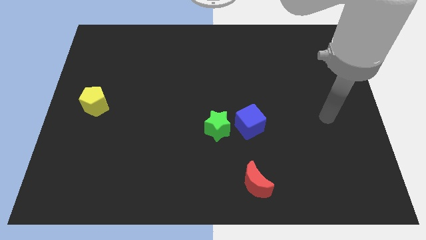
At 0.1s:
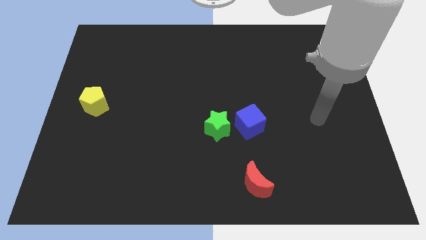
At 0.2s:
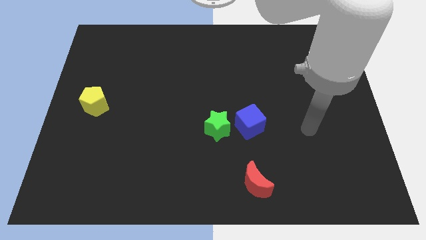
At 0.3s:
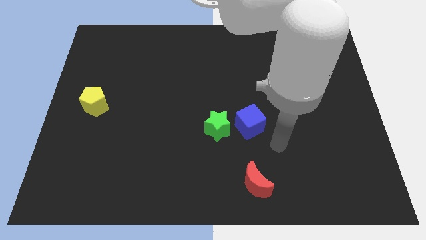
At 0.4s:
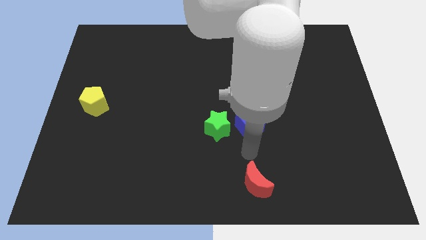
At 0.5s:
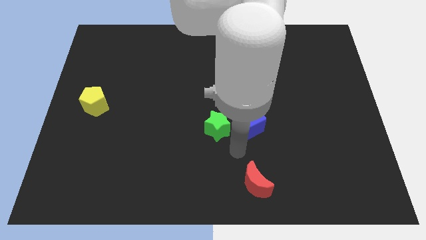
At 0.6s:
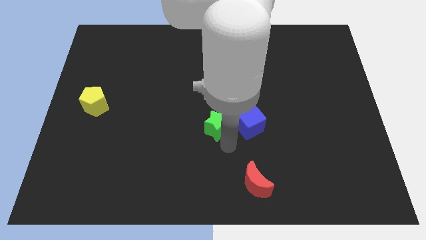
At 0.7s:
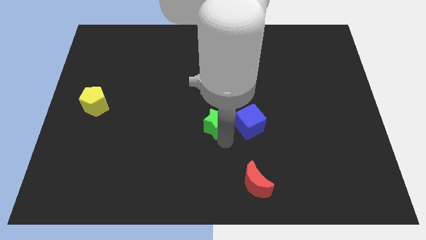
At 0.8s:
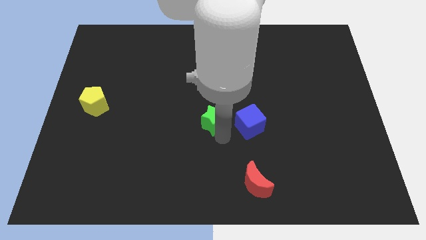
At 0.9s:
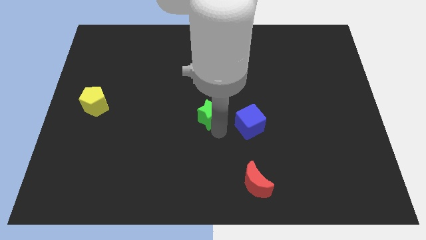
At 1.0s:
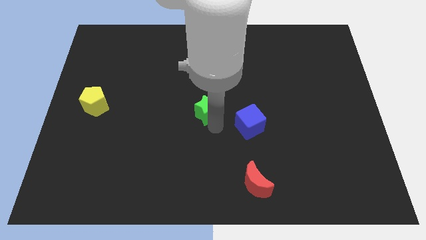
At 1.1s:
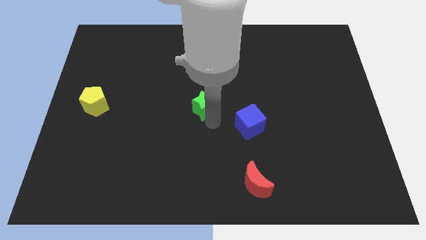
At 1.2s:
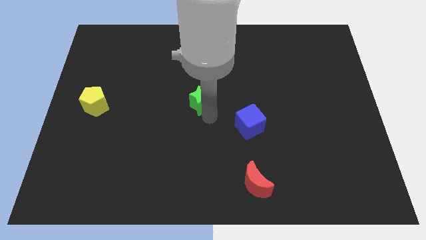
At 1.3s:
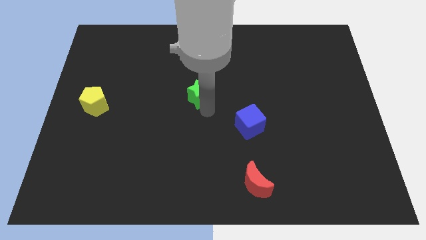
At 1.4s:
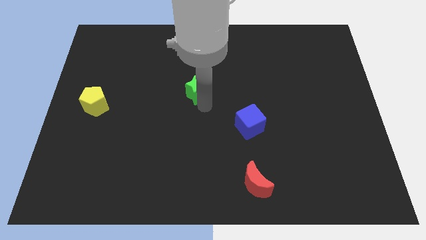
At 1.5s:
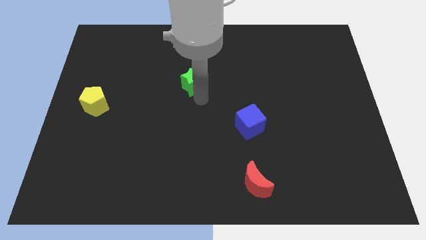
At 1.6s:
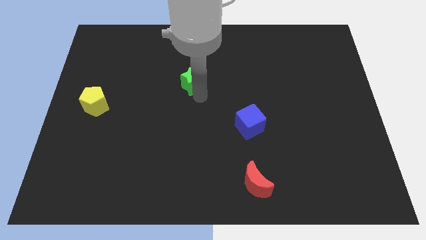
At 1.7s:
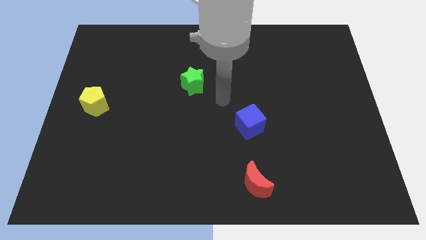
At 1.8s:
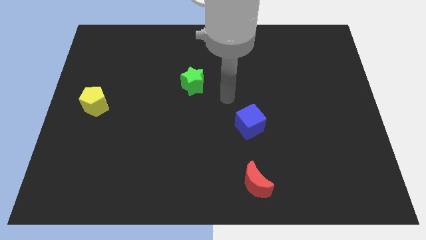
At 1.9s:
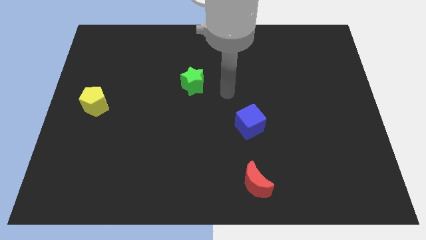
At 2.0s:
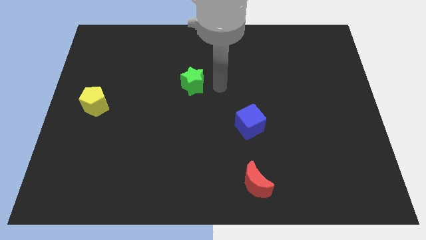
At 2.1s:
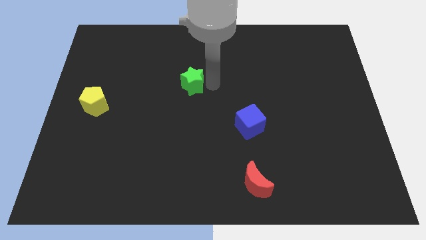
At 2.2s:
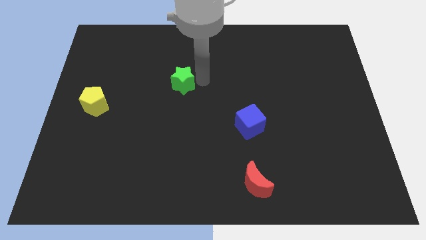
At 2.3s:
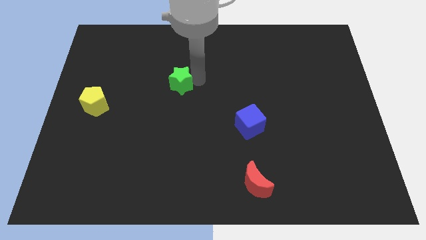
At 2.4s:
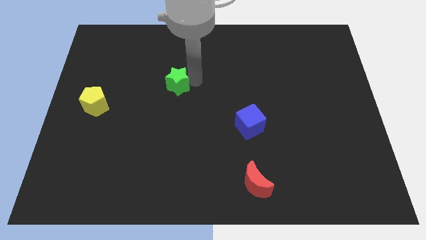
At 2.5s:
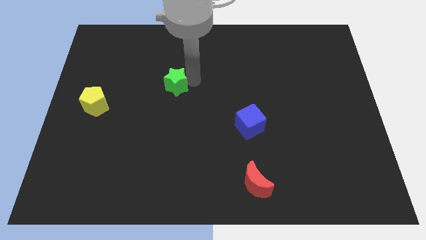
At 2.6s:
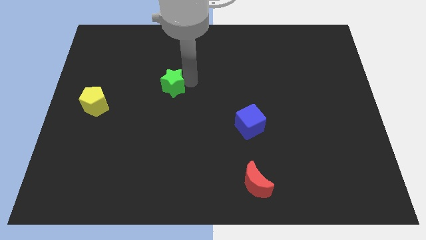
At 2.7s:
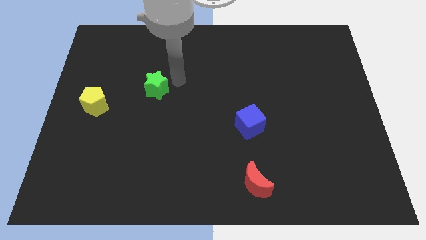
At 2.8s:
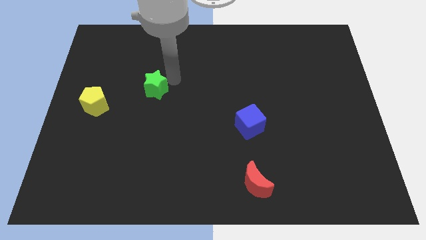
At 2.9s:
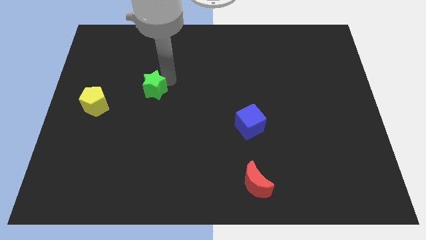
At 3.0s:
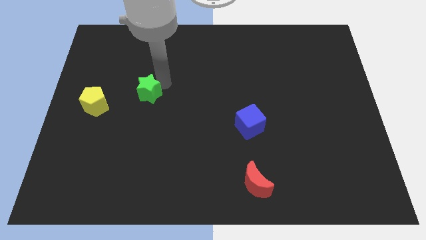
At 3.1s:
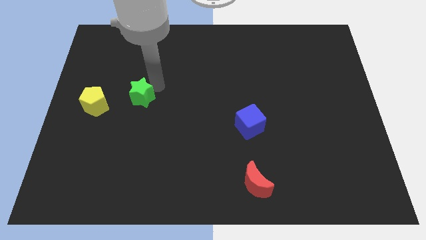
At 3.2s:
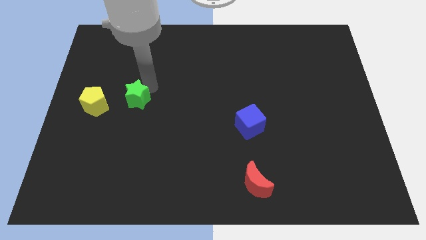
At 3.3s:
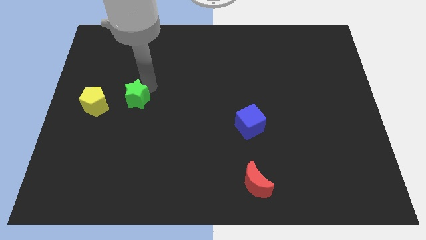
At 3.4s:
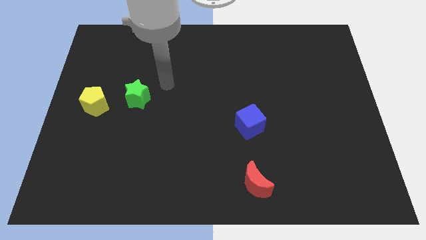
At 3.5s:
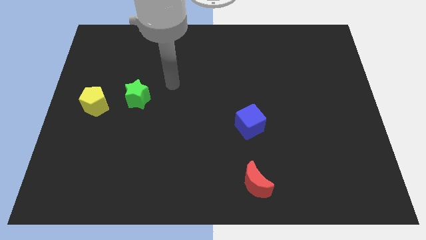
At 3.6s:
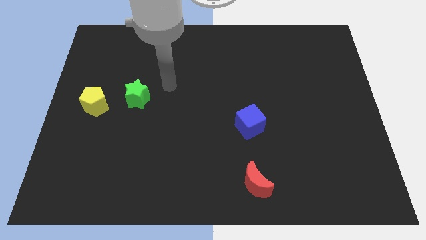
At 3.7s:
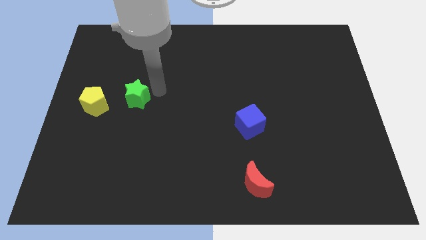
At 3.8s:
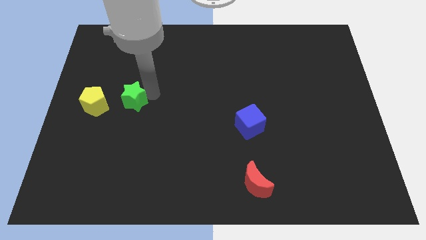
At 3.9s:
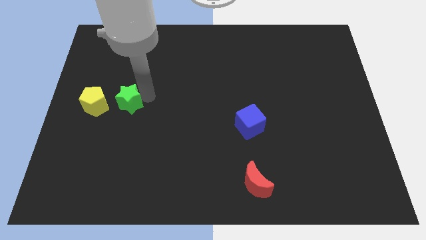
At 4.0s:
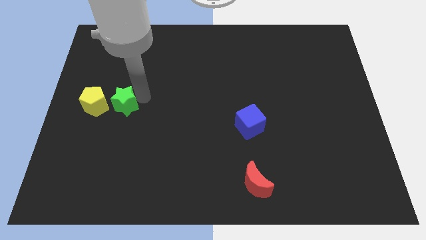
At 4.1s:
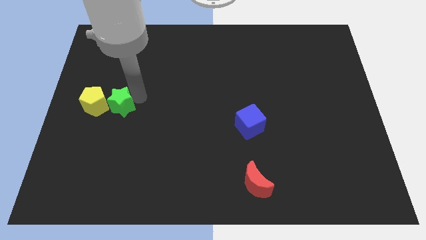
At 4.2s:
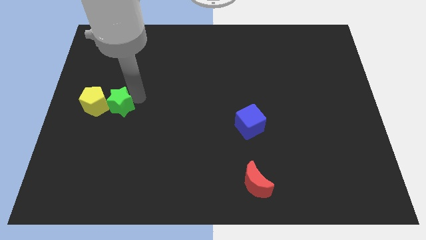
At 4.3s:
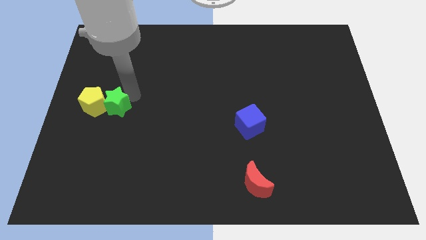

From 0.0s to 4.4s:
move the green star close to the yellow pentagon

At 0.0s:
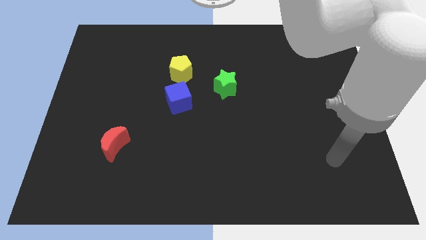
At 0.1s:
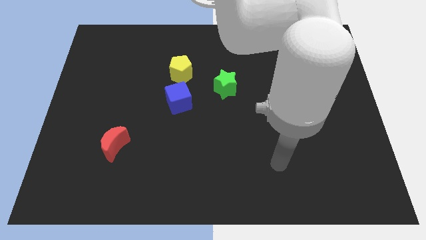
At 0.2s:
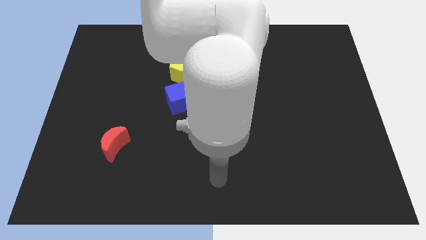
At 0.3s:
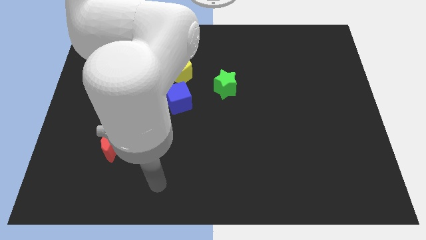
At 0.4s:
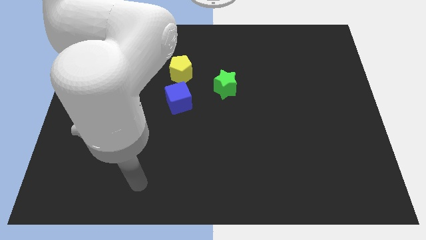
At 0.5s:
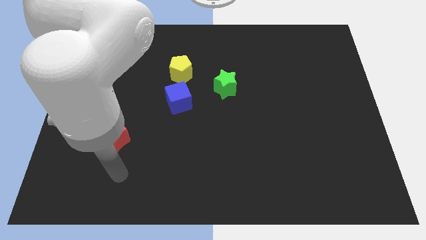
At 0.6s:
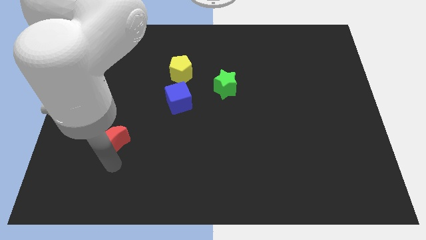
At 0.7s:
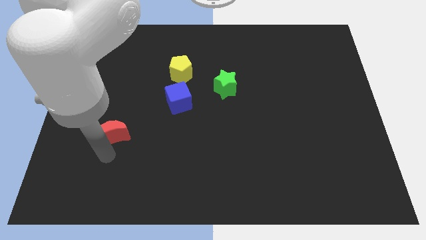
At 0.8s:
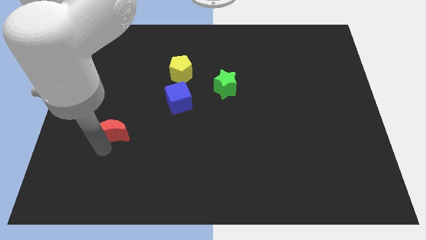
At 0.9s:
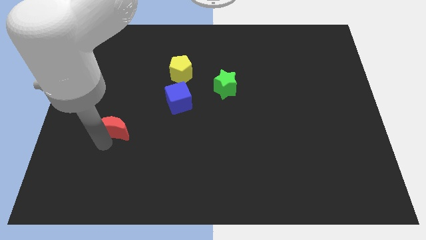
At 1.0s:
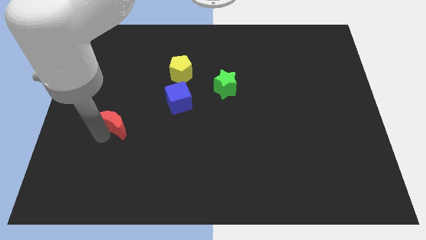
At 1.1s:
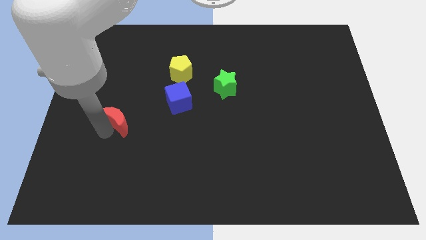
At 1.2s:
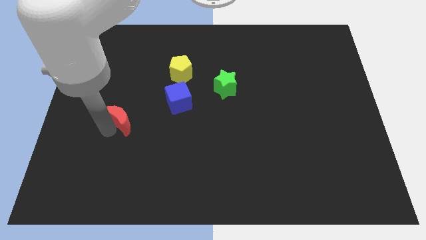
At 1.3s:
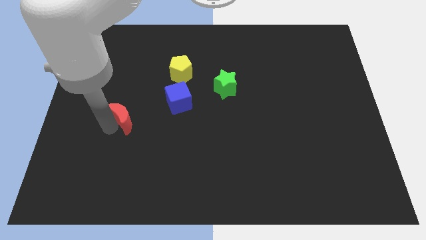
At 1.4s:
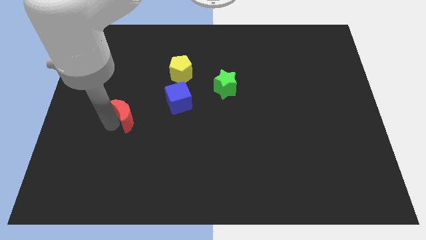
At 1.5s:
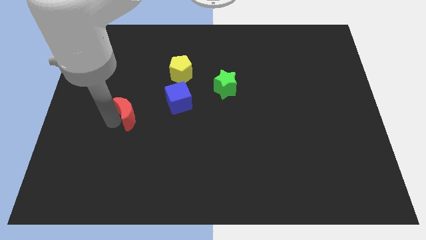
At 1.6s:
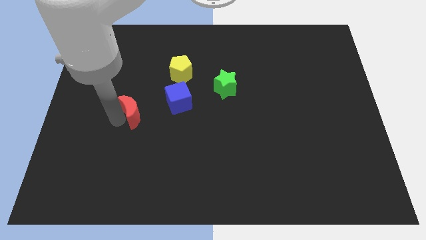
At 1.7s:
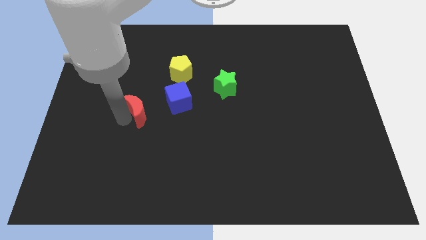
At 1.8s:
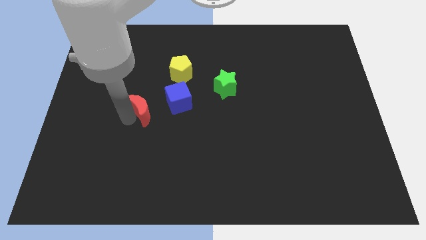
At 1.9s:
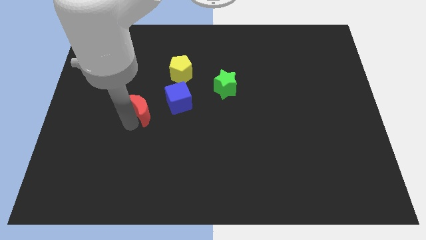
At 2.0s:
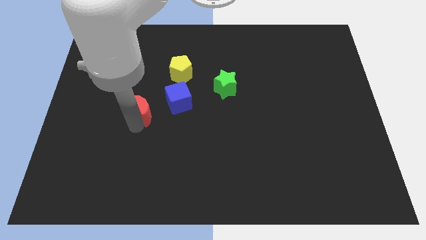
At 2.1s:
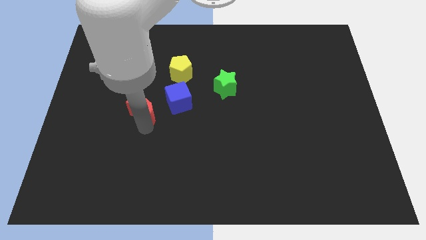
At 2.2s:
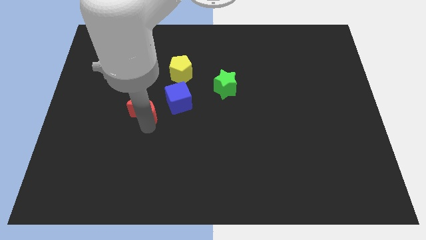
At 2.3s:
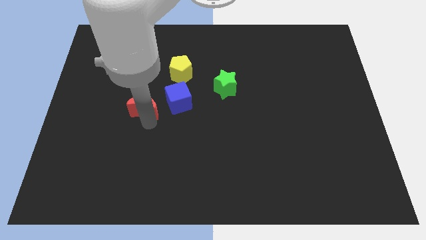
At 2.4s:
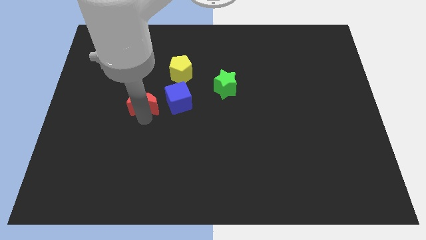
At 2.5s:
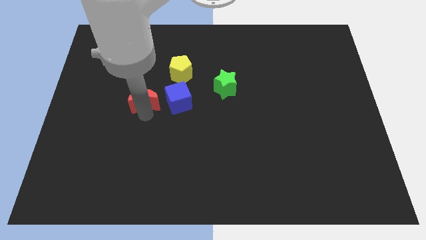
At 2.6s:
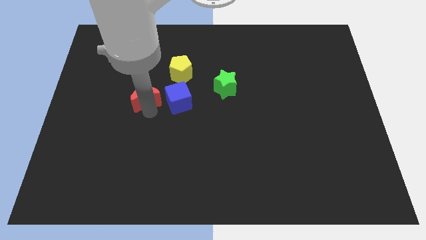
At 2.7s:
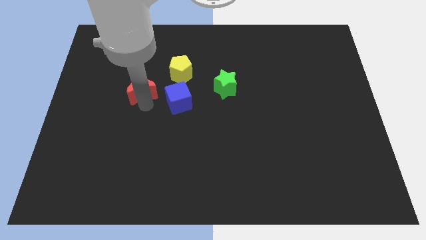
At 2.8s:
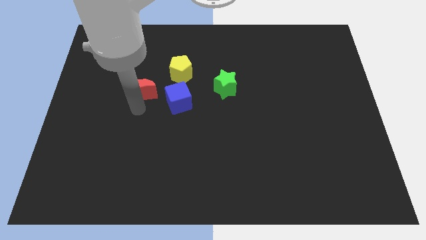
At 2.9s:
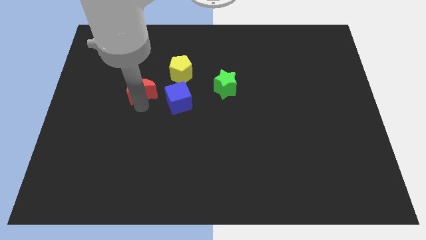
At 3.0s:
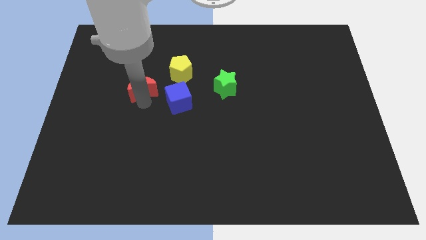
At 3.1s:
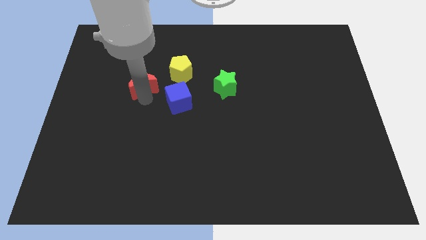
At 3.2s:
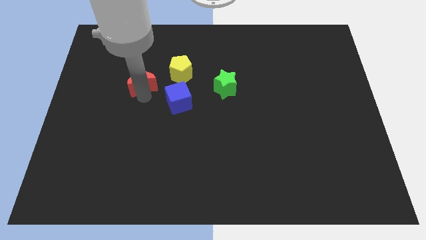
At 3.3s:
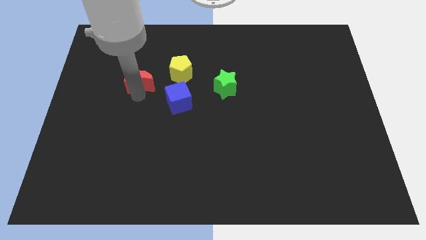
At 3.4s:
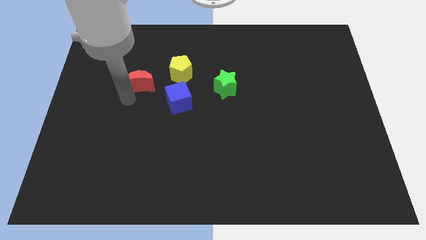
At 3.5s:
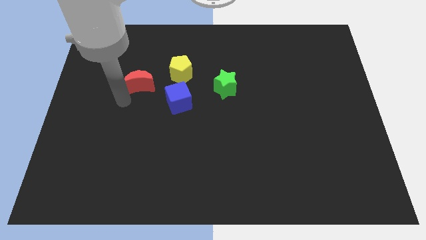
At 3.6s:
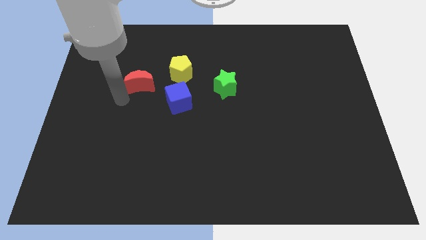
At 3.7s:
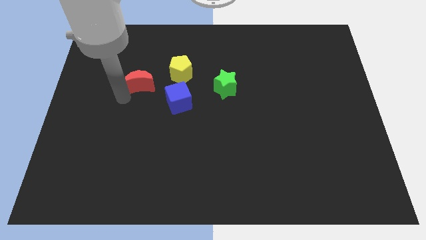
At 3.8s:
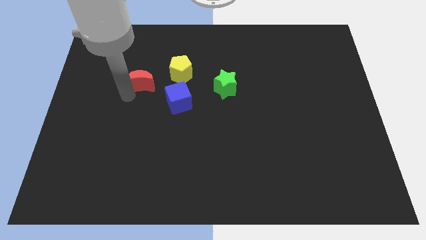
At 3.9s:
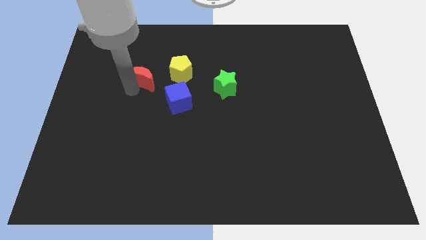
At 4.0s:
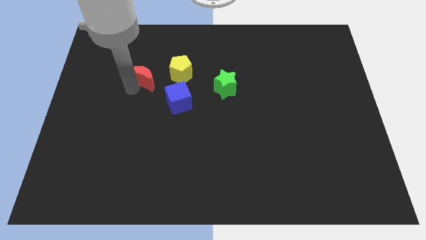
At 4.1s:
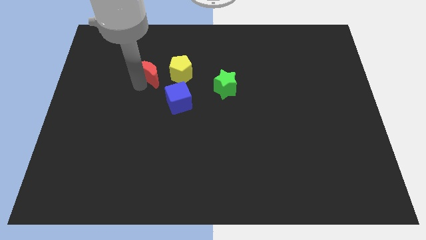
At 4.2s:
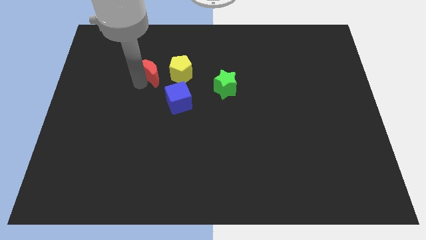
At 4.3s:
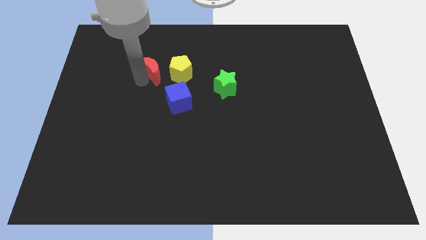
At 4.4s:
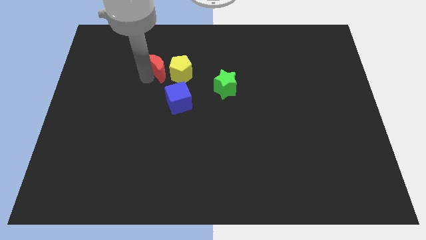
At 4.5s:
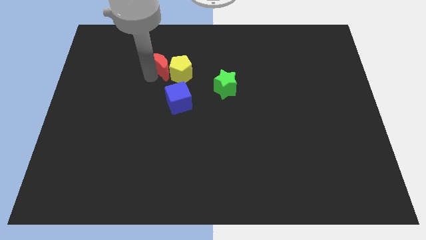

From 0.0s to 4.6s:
slide the red moon to the pentagon
